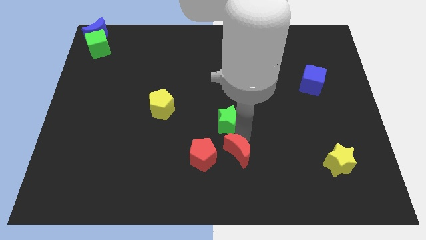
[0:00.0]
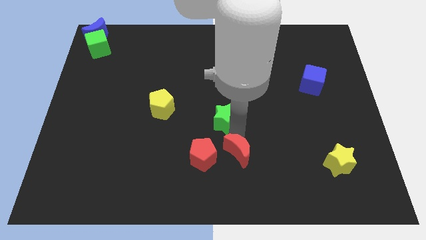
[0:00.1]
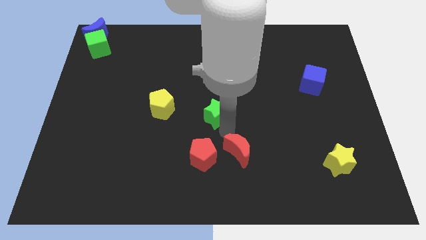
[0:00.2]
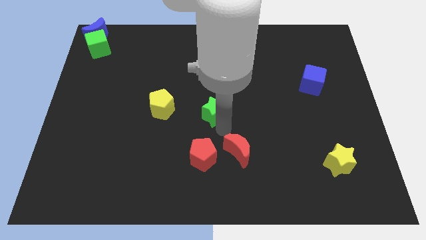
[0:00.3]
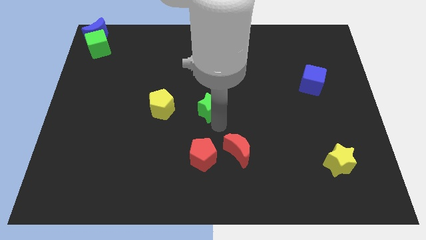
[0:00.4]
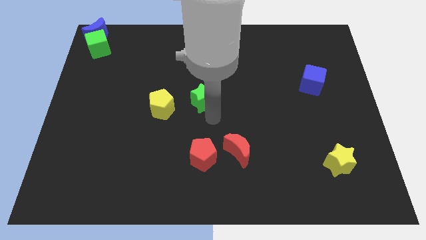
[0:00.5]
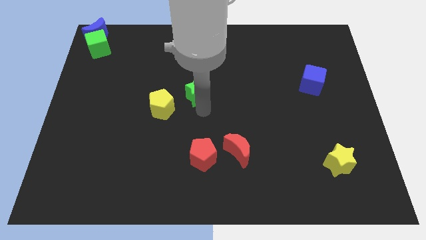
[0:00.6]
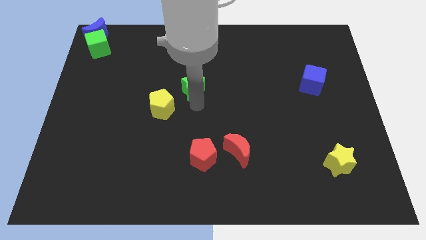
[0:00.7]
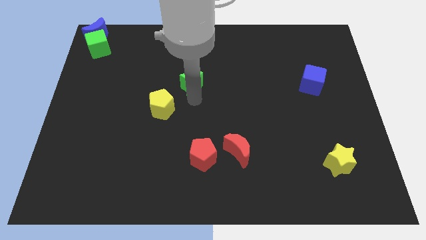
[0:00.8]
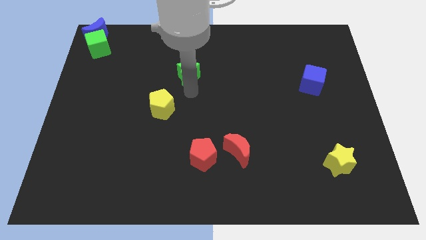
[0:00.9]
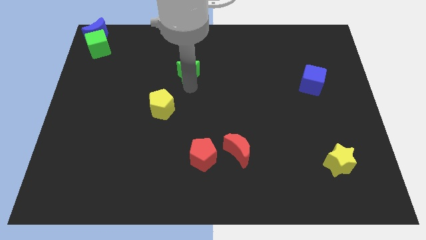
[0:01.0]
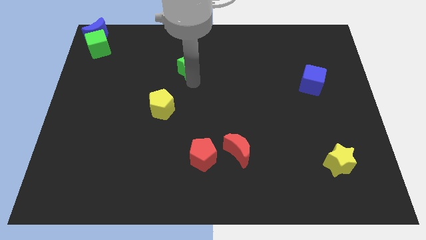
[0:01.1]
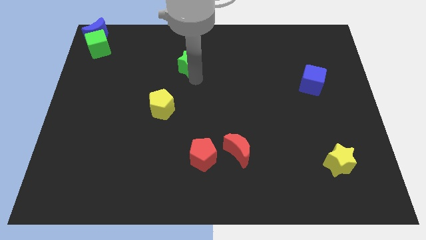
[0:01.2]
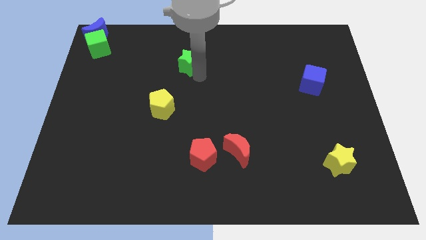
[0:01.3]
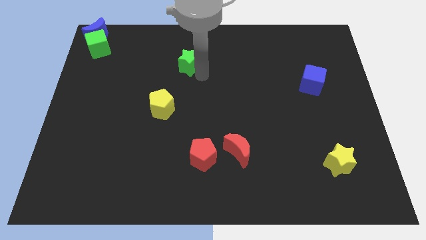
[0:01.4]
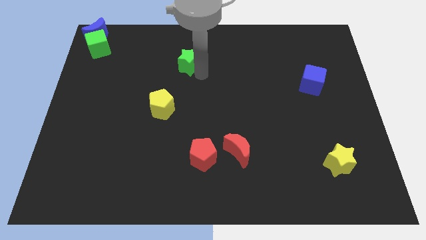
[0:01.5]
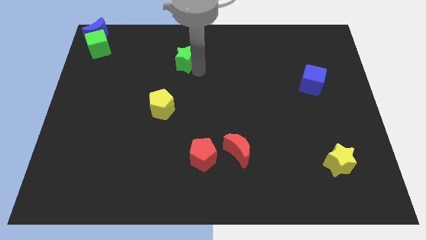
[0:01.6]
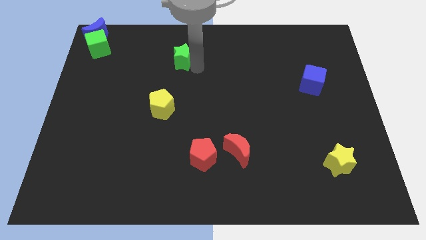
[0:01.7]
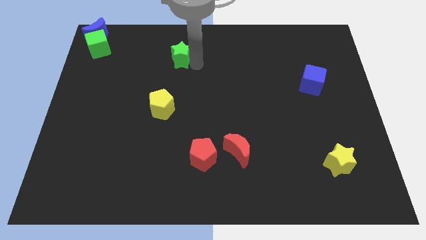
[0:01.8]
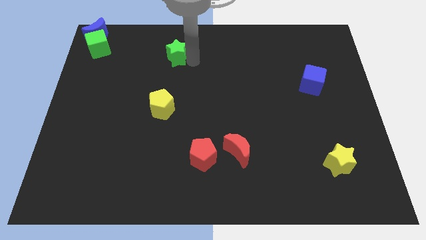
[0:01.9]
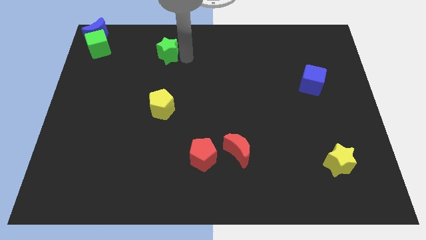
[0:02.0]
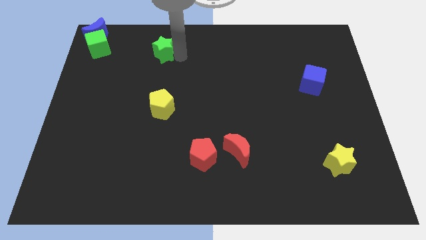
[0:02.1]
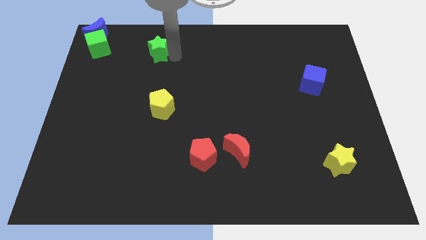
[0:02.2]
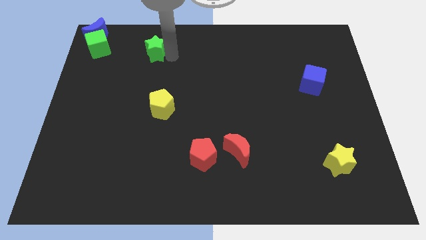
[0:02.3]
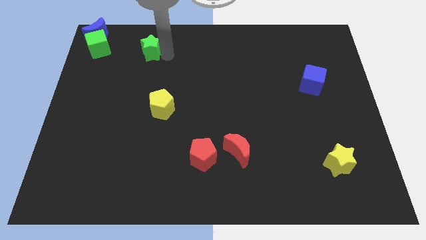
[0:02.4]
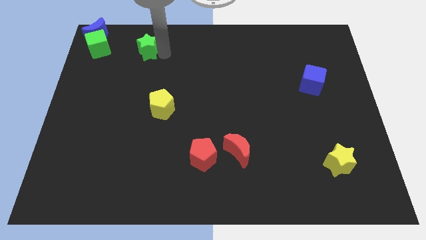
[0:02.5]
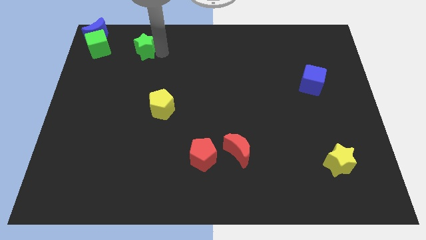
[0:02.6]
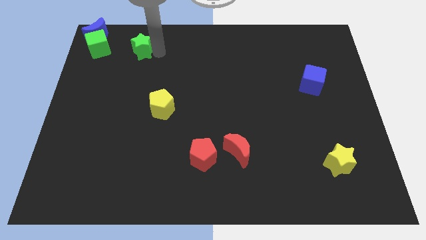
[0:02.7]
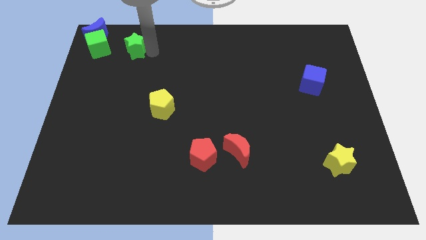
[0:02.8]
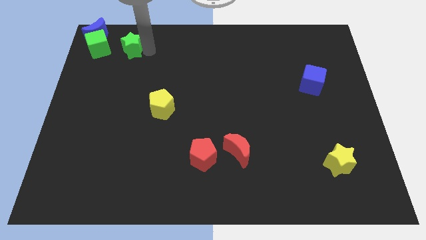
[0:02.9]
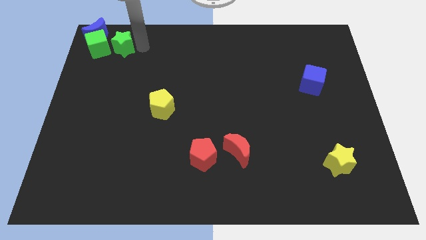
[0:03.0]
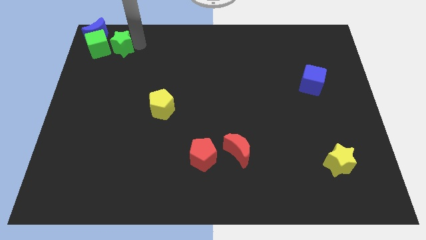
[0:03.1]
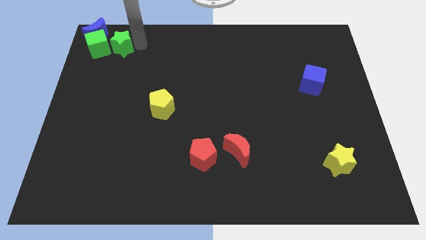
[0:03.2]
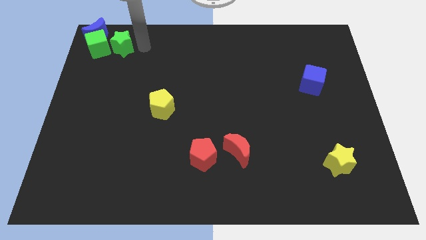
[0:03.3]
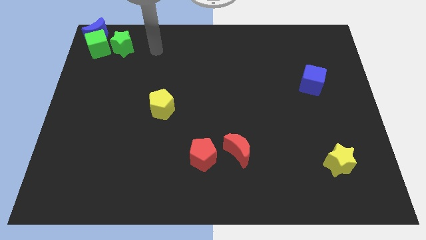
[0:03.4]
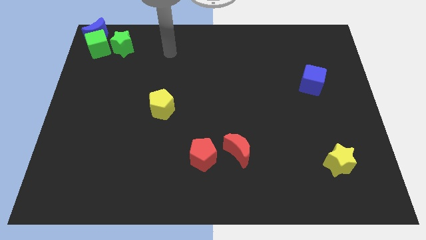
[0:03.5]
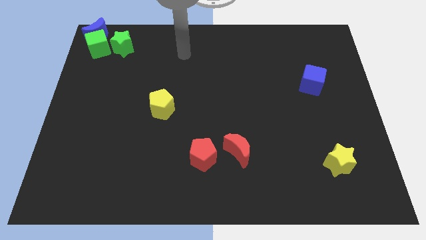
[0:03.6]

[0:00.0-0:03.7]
move the green star right to the green cube

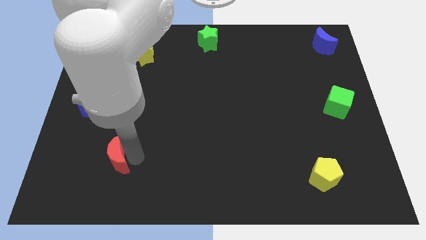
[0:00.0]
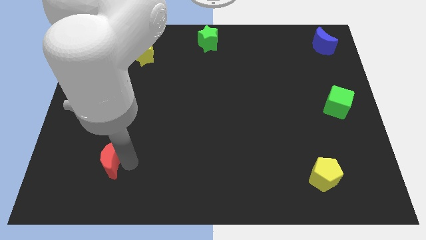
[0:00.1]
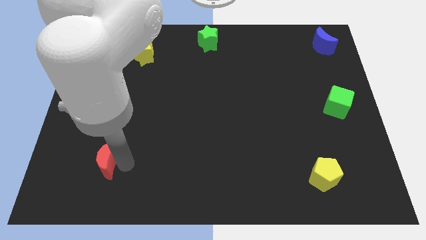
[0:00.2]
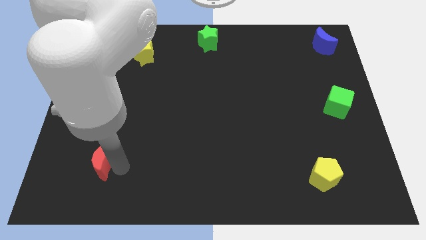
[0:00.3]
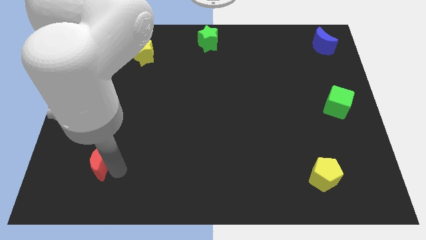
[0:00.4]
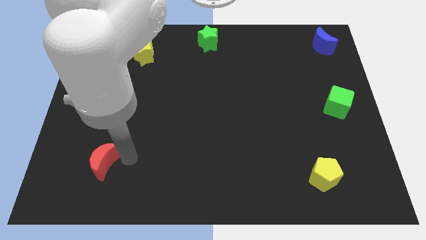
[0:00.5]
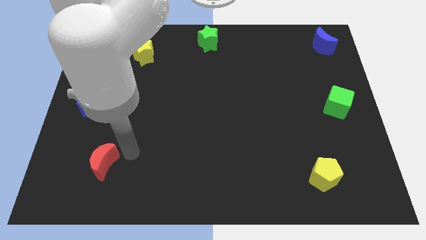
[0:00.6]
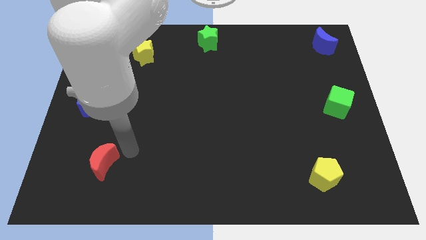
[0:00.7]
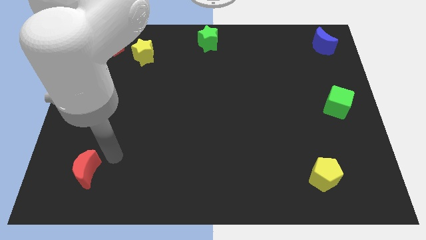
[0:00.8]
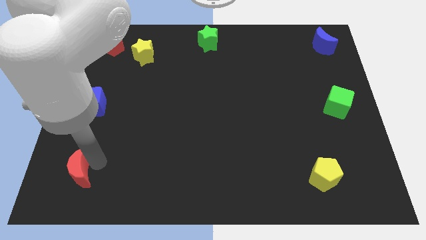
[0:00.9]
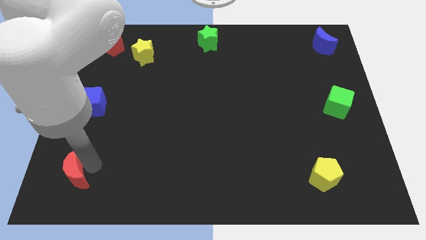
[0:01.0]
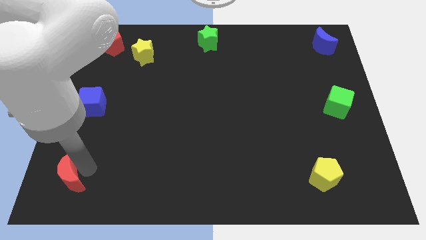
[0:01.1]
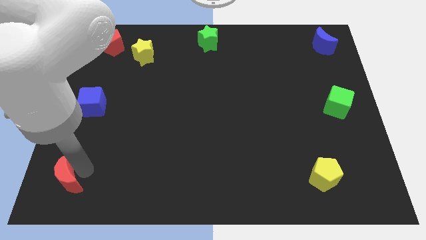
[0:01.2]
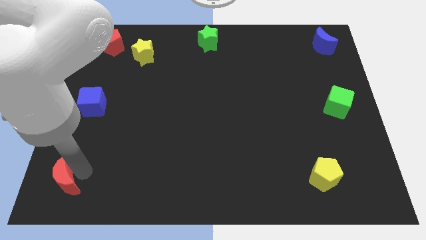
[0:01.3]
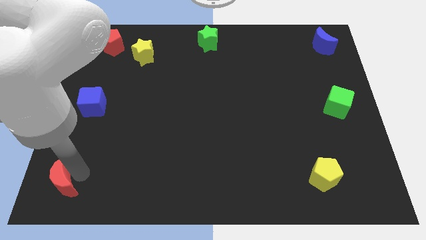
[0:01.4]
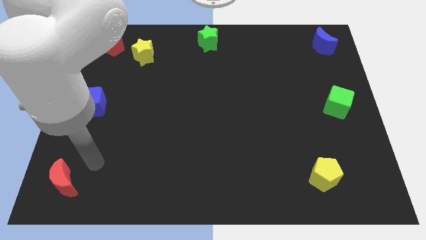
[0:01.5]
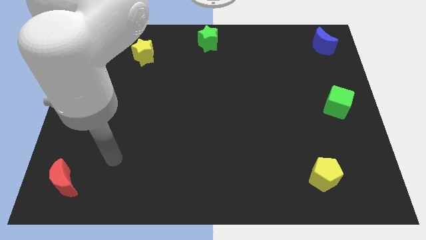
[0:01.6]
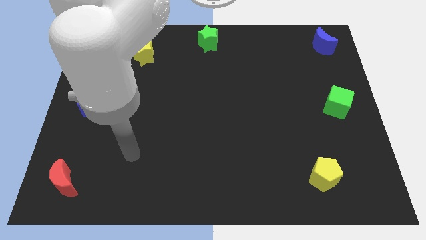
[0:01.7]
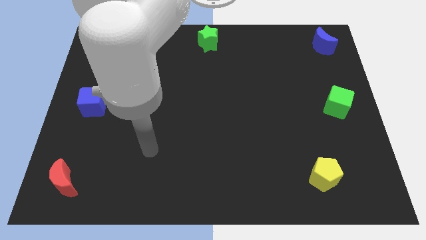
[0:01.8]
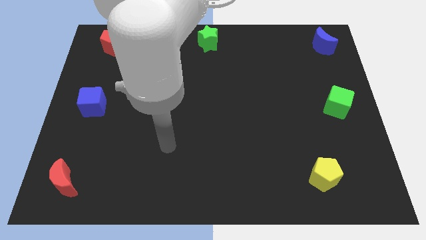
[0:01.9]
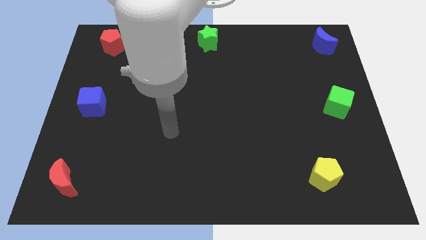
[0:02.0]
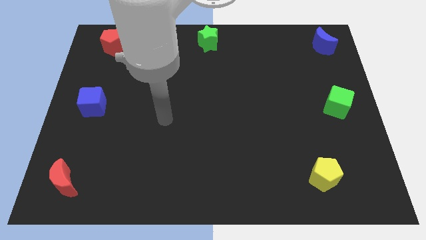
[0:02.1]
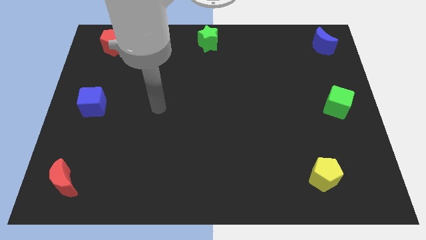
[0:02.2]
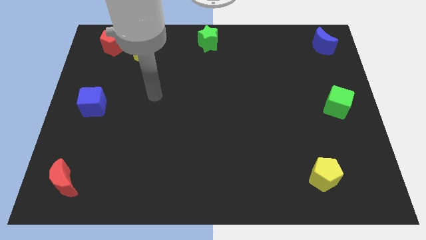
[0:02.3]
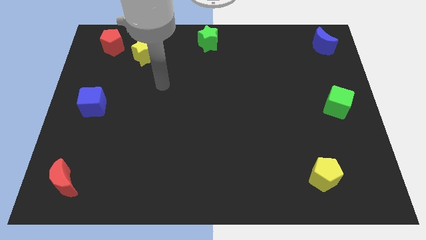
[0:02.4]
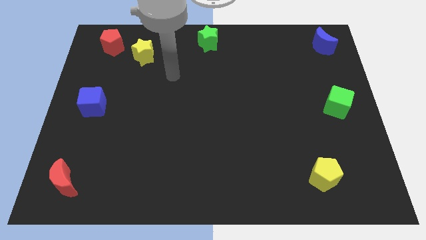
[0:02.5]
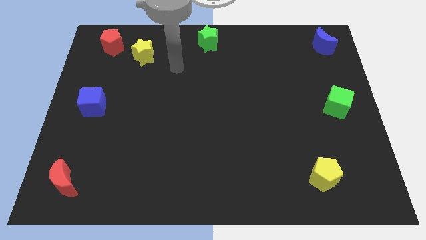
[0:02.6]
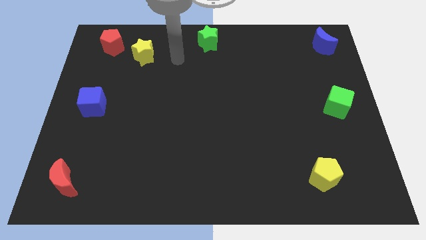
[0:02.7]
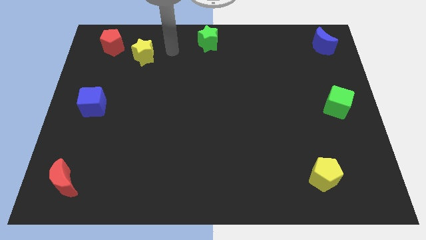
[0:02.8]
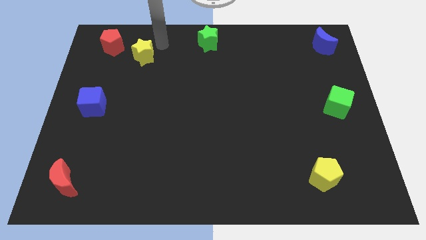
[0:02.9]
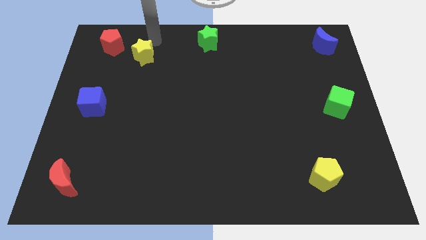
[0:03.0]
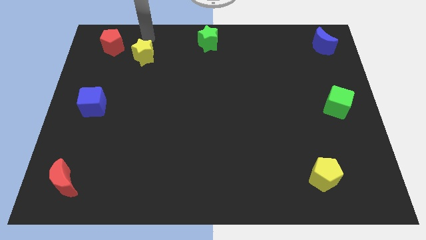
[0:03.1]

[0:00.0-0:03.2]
move the arm towards the right side of the yellow star

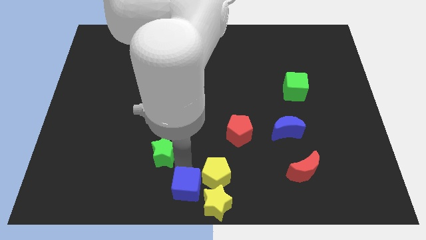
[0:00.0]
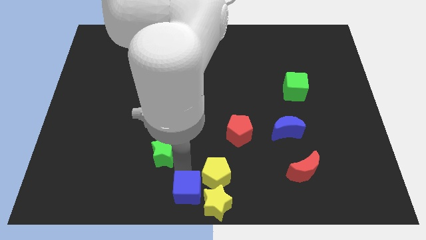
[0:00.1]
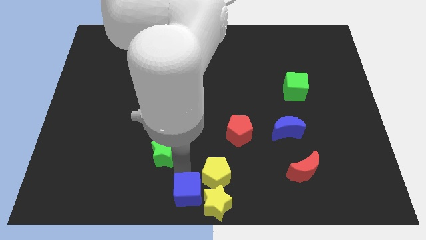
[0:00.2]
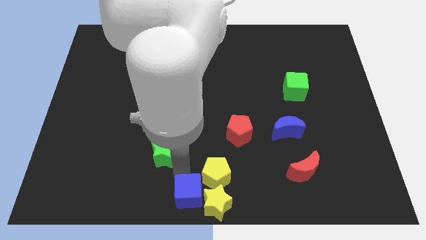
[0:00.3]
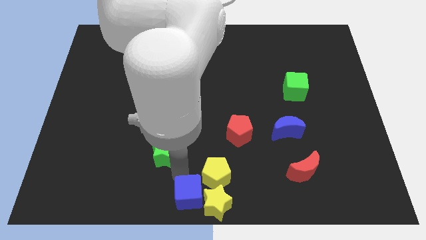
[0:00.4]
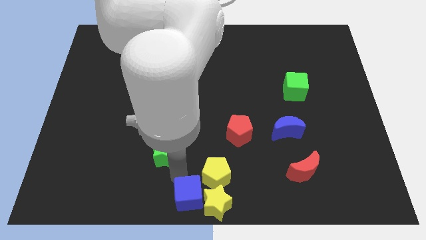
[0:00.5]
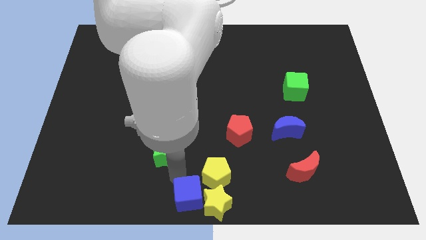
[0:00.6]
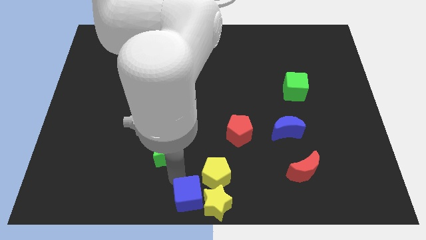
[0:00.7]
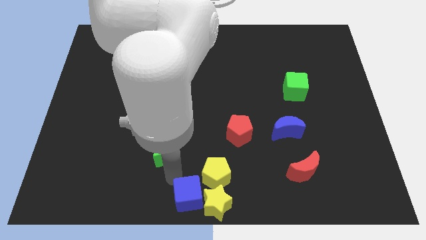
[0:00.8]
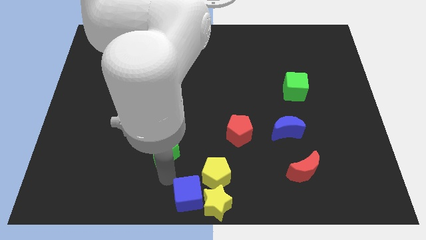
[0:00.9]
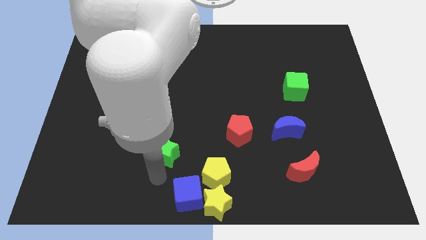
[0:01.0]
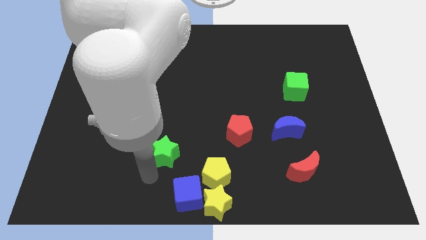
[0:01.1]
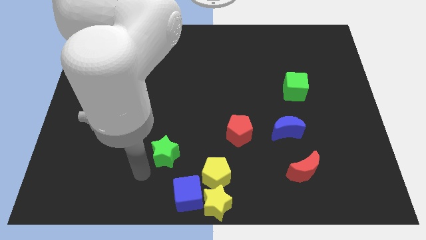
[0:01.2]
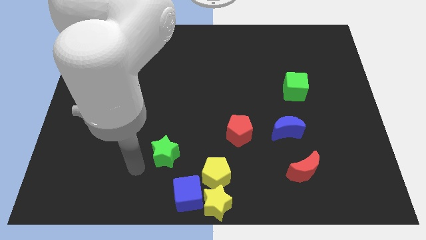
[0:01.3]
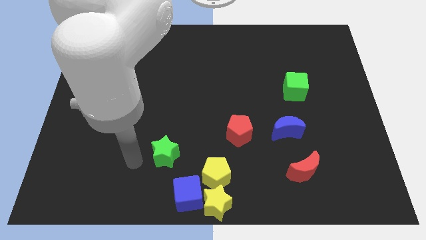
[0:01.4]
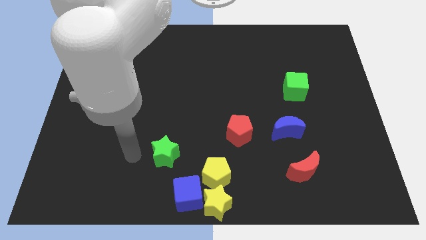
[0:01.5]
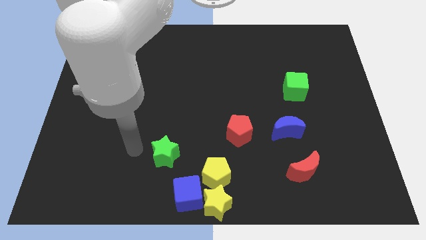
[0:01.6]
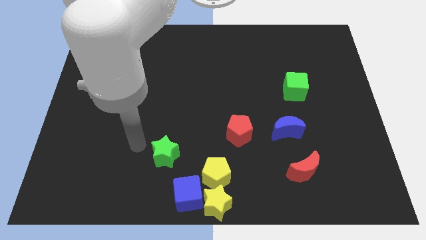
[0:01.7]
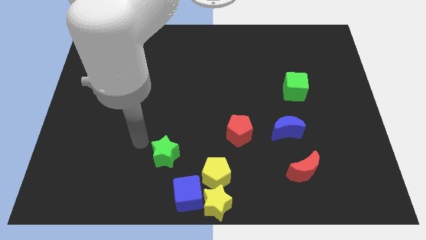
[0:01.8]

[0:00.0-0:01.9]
push the blue cube towards the center bottom of the board

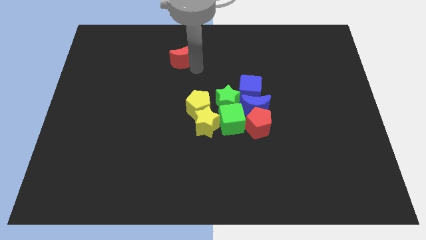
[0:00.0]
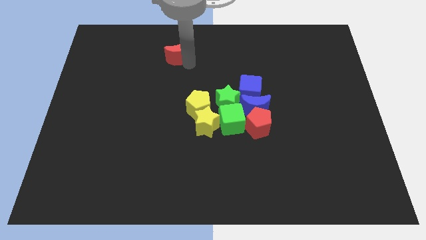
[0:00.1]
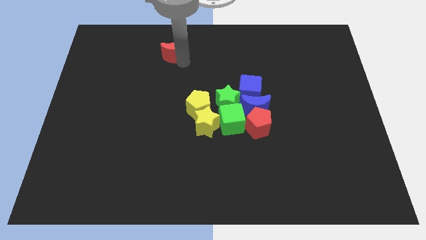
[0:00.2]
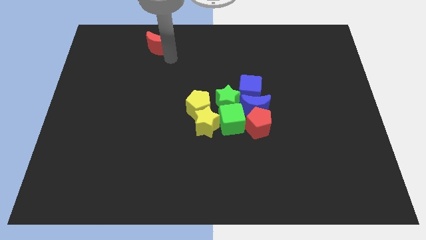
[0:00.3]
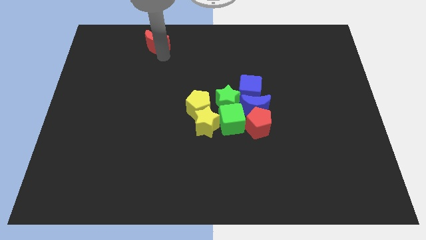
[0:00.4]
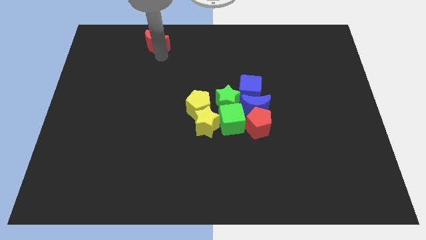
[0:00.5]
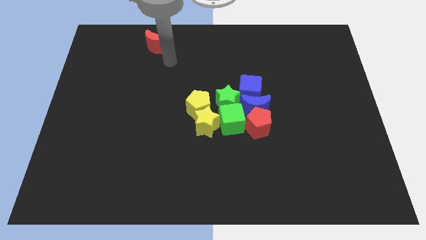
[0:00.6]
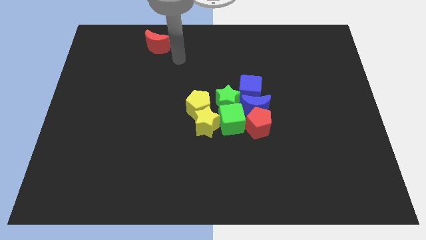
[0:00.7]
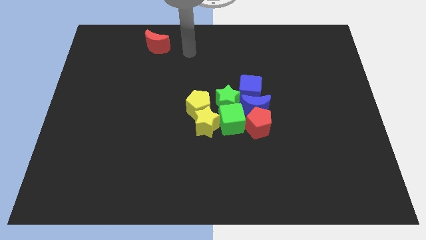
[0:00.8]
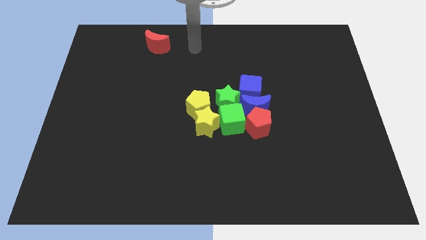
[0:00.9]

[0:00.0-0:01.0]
move the red crescent to the top left of the board
